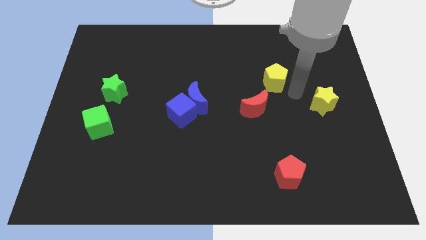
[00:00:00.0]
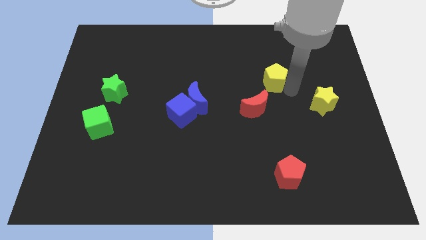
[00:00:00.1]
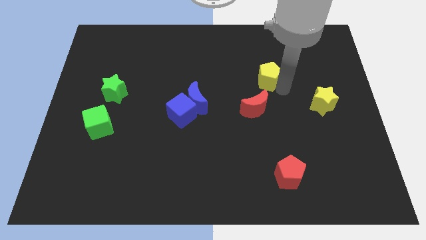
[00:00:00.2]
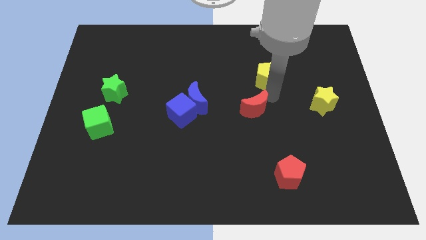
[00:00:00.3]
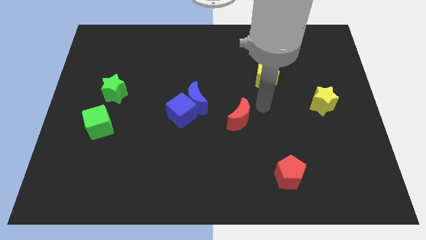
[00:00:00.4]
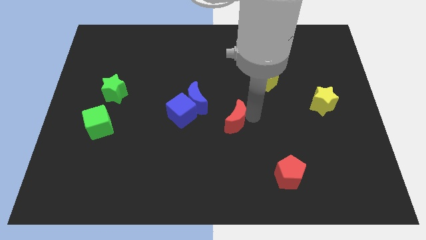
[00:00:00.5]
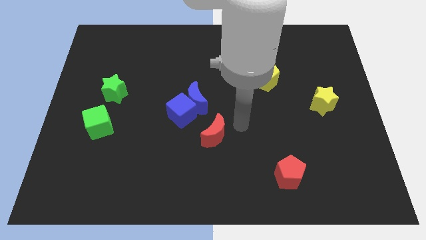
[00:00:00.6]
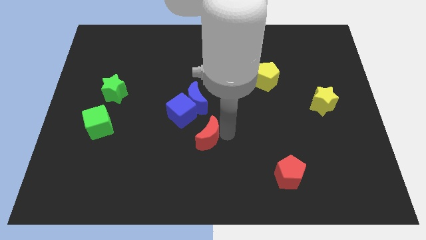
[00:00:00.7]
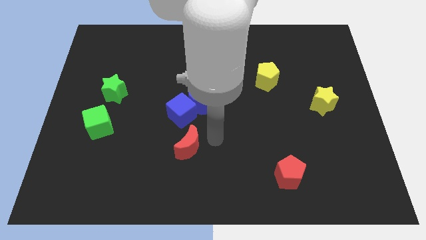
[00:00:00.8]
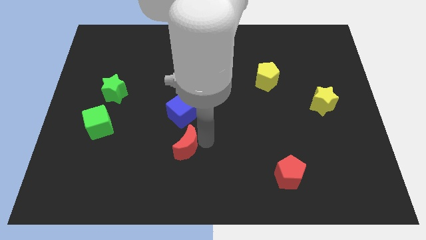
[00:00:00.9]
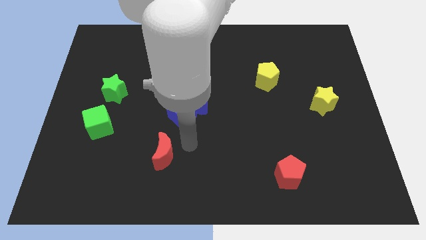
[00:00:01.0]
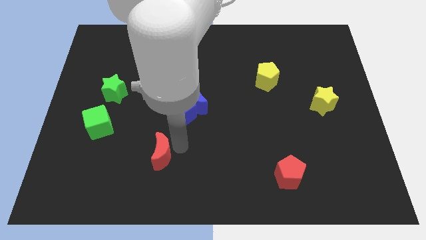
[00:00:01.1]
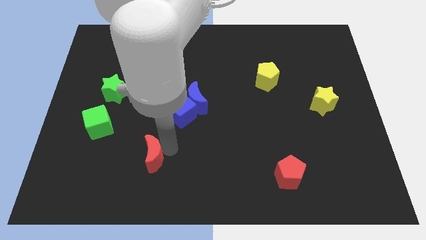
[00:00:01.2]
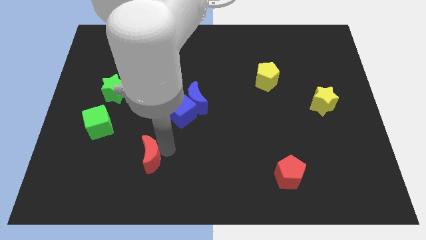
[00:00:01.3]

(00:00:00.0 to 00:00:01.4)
move the red moon diagonal to the blue cube

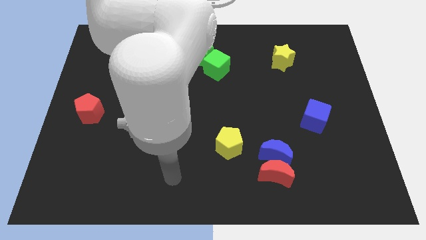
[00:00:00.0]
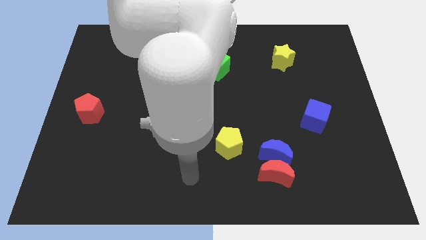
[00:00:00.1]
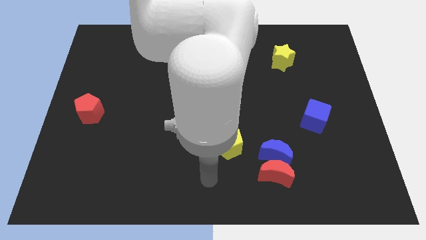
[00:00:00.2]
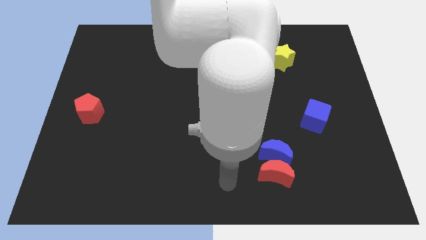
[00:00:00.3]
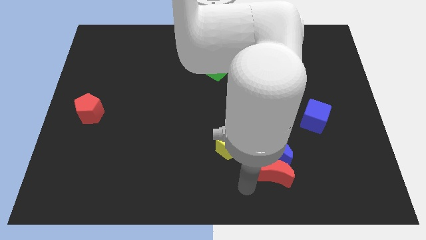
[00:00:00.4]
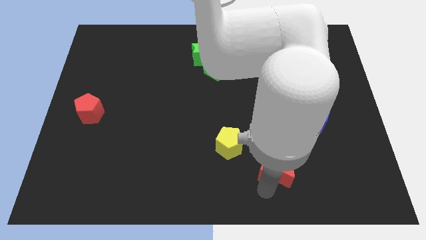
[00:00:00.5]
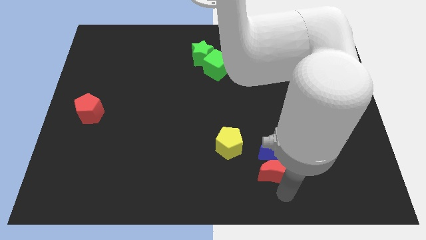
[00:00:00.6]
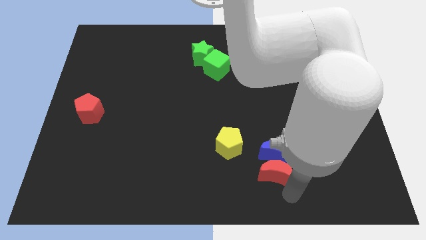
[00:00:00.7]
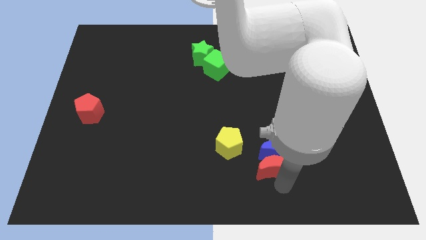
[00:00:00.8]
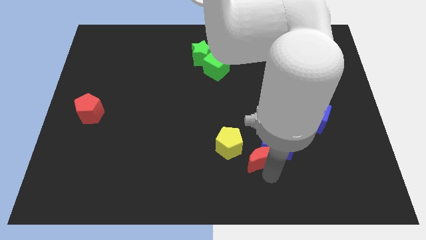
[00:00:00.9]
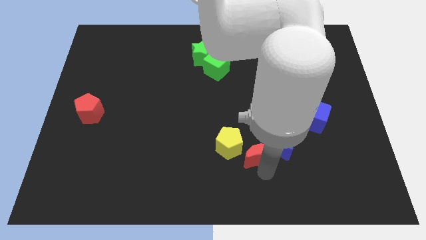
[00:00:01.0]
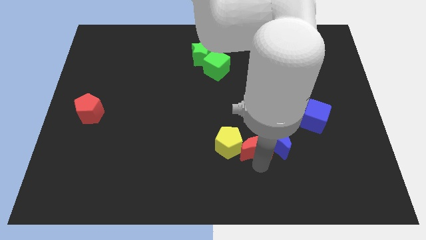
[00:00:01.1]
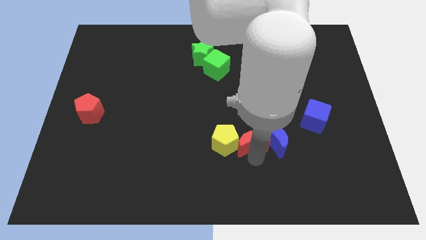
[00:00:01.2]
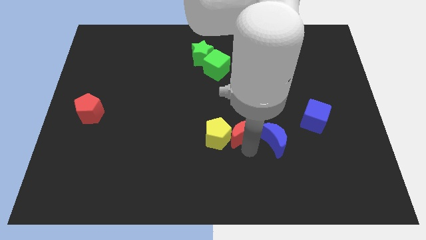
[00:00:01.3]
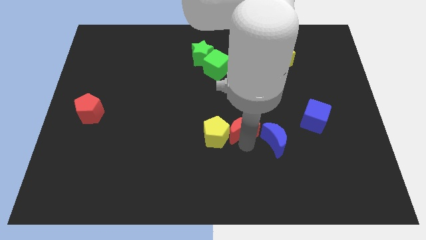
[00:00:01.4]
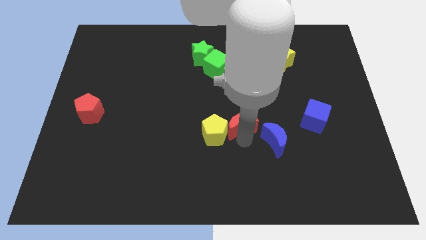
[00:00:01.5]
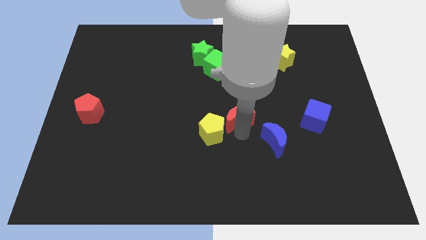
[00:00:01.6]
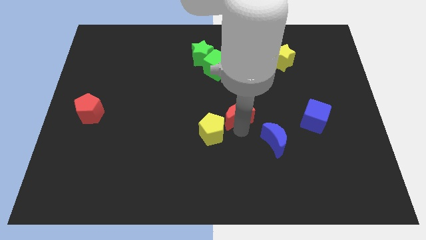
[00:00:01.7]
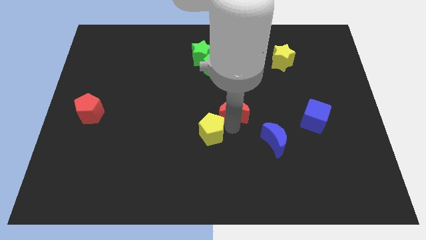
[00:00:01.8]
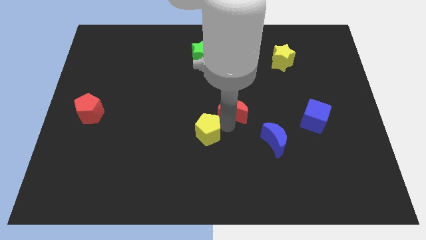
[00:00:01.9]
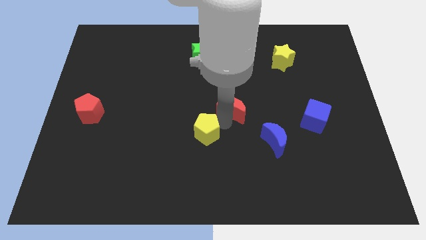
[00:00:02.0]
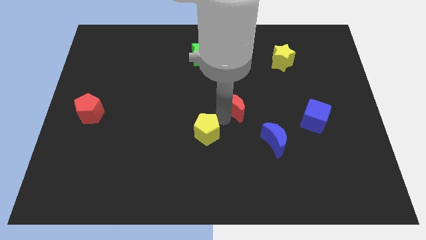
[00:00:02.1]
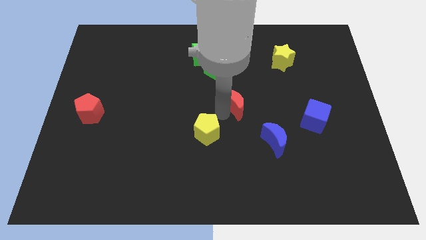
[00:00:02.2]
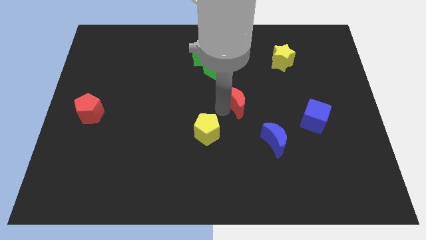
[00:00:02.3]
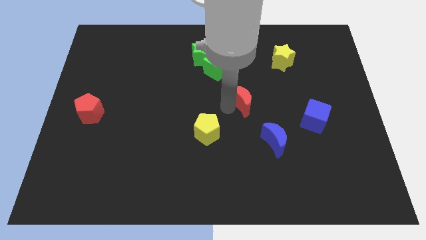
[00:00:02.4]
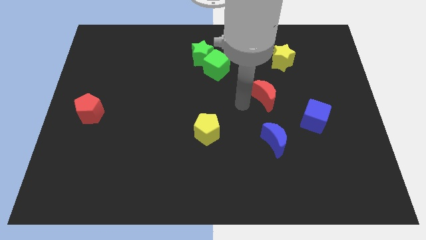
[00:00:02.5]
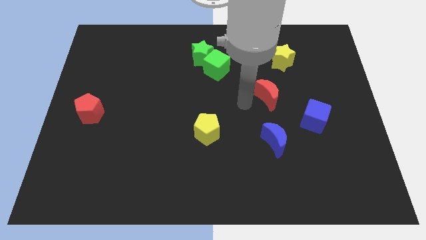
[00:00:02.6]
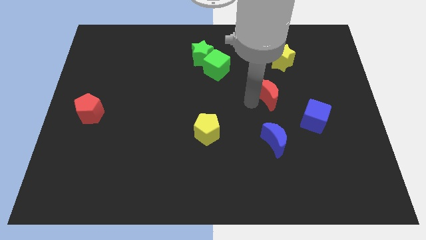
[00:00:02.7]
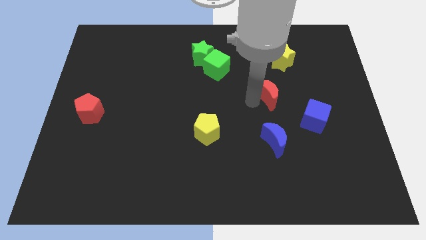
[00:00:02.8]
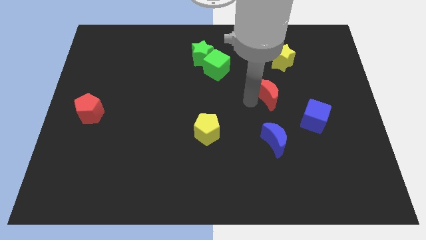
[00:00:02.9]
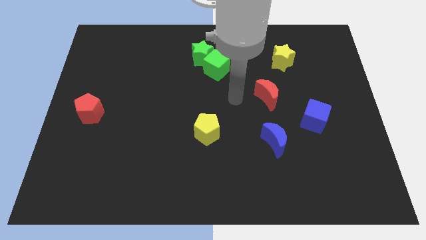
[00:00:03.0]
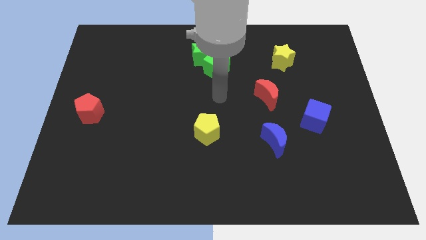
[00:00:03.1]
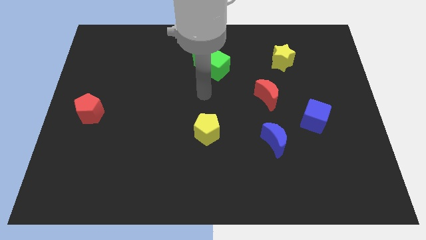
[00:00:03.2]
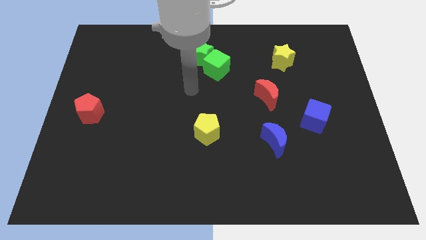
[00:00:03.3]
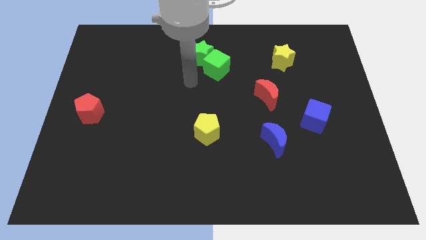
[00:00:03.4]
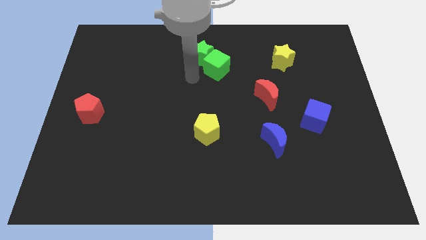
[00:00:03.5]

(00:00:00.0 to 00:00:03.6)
separate the moons and yellow pentagon in different directions

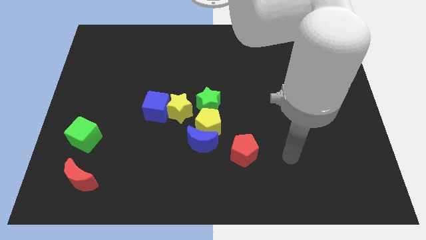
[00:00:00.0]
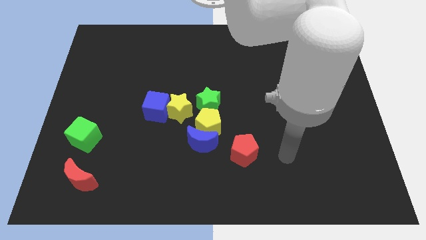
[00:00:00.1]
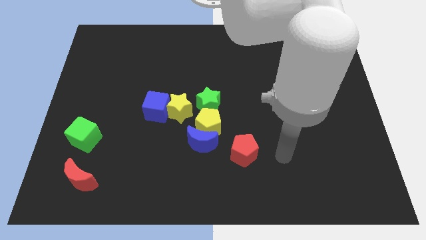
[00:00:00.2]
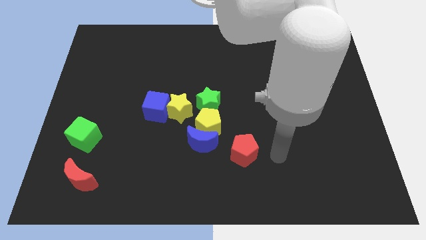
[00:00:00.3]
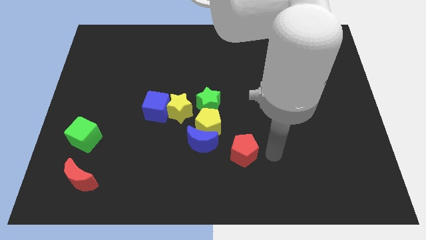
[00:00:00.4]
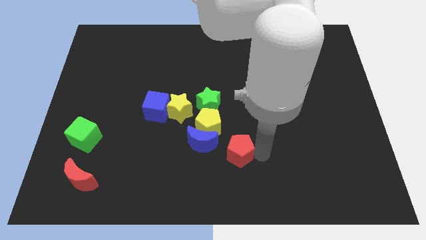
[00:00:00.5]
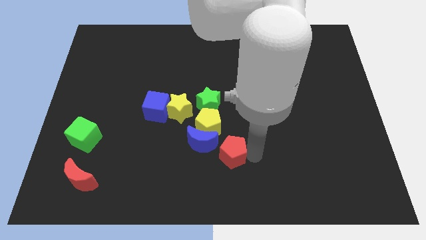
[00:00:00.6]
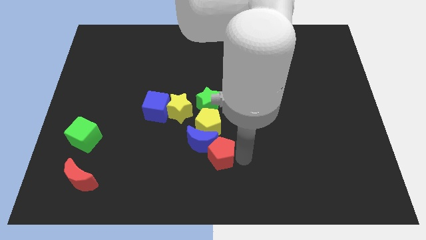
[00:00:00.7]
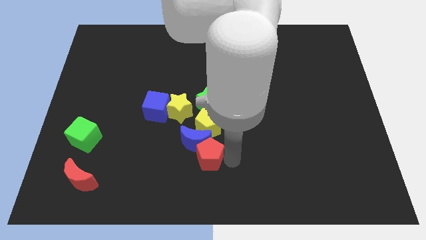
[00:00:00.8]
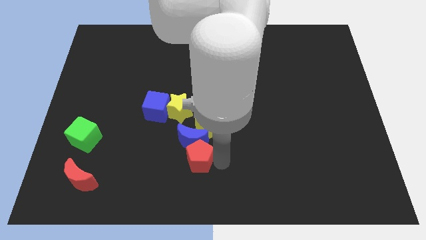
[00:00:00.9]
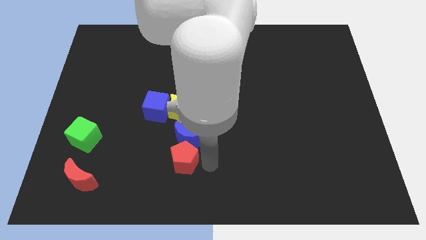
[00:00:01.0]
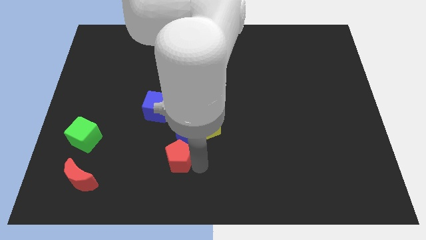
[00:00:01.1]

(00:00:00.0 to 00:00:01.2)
move the red pentagon bottom of the blue crescent

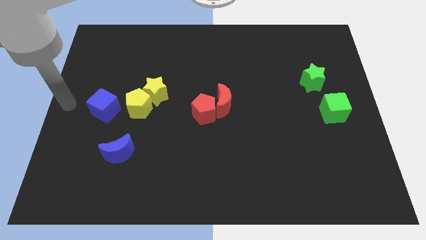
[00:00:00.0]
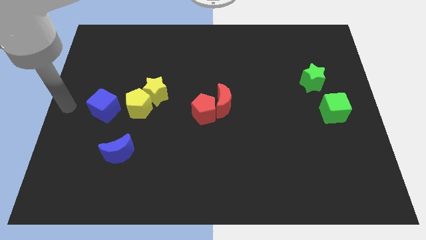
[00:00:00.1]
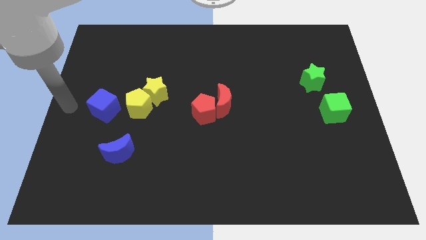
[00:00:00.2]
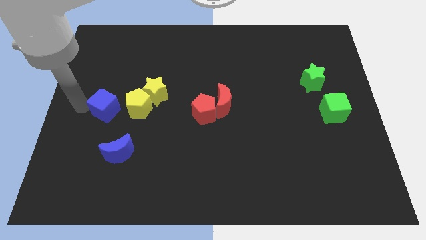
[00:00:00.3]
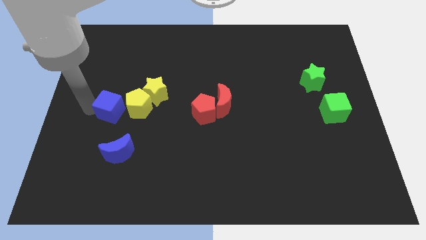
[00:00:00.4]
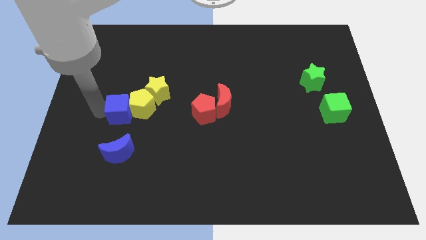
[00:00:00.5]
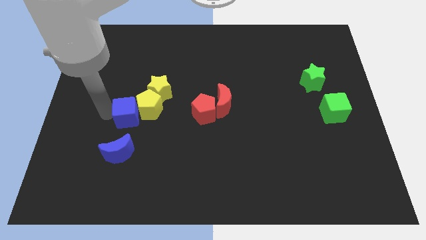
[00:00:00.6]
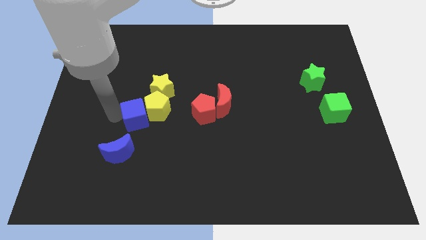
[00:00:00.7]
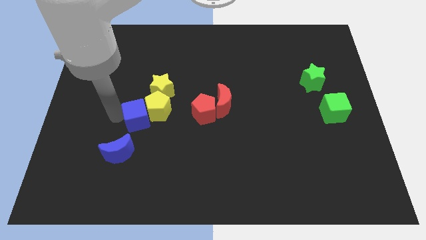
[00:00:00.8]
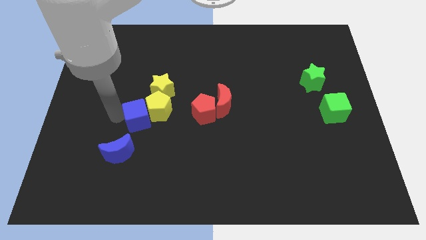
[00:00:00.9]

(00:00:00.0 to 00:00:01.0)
move the blue cube to the left of the yellow pentagon

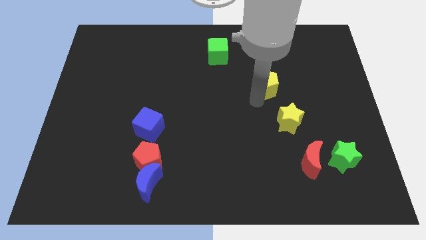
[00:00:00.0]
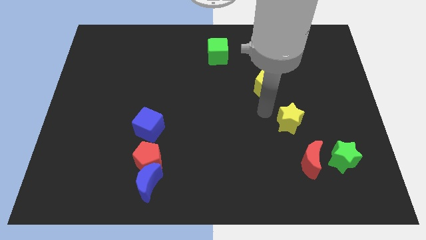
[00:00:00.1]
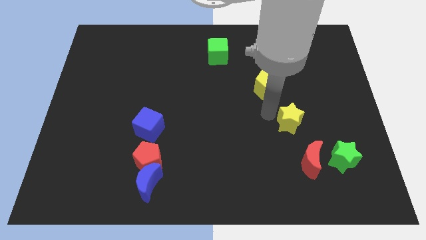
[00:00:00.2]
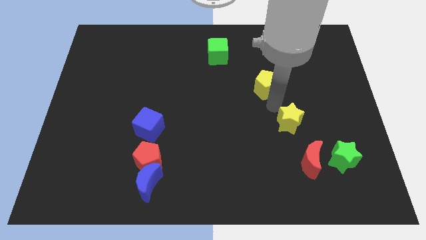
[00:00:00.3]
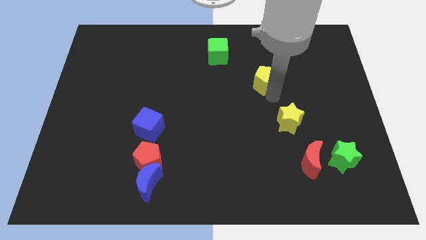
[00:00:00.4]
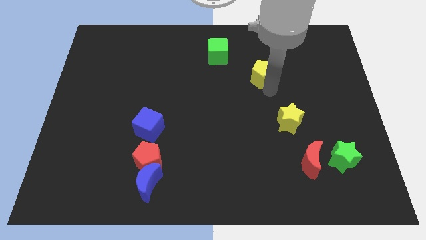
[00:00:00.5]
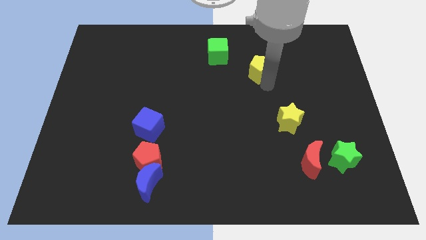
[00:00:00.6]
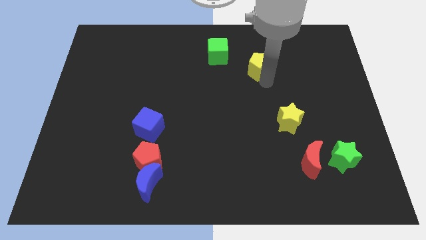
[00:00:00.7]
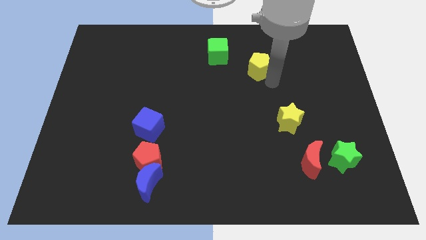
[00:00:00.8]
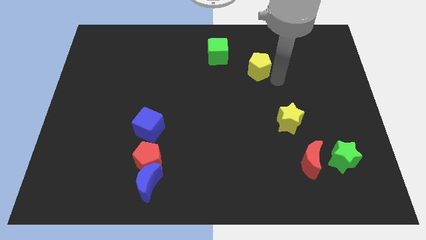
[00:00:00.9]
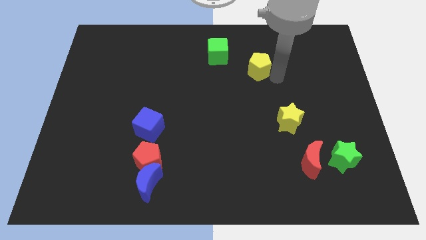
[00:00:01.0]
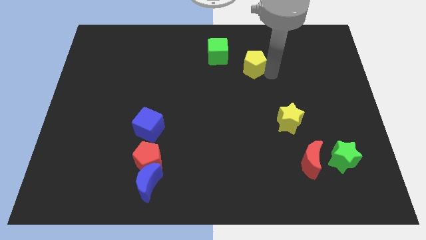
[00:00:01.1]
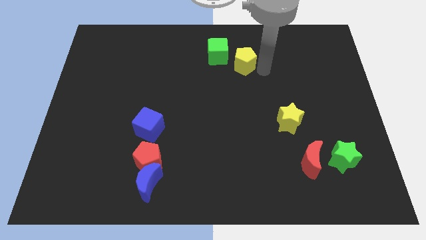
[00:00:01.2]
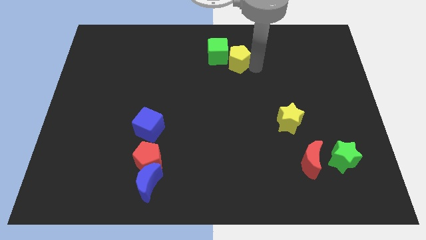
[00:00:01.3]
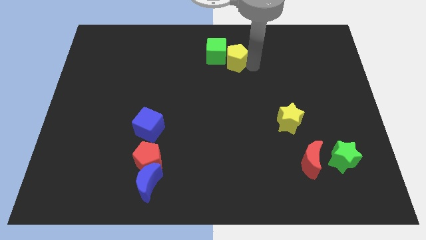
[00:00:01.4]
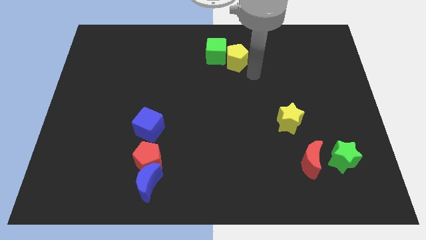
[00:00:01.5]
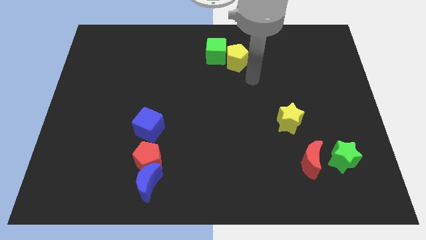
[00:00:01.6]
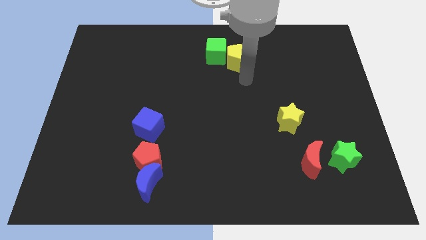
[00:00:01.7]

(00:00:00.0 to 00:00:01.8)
push the yellow pentagon into the green cube
